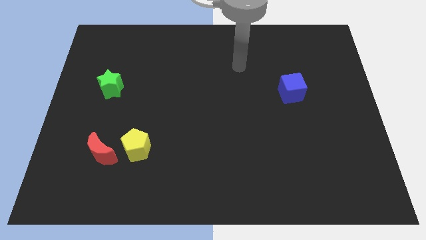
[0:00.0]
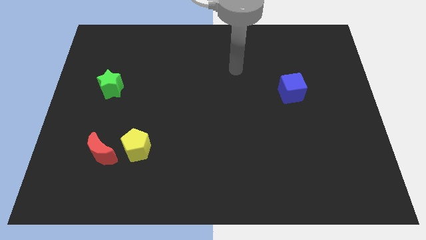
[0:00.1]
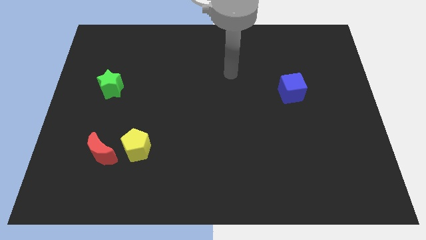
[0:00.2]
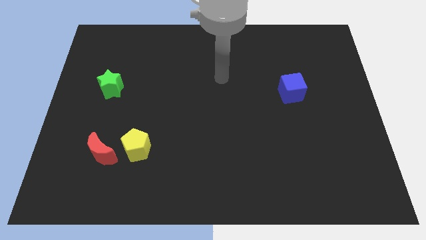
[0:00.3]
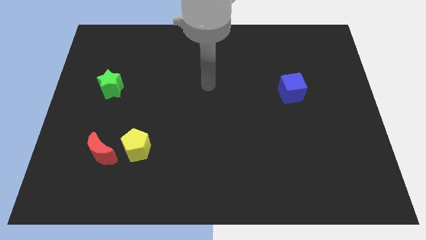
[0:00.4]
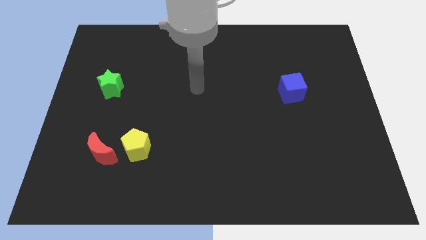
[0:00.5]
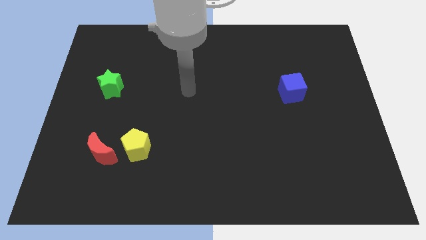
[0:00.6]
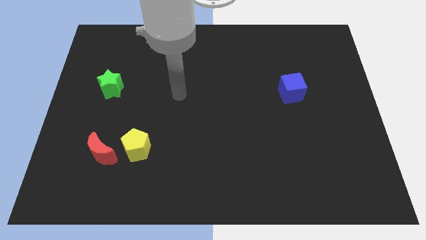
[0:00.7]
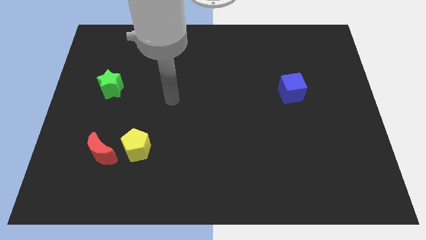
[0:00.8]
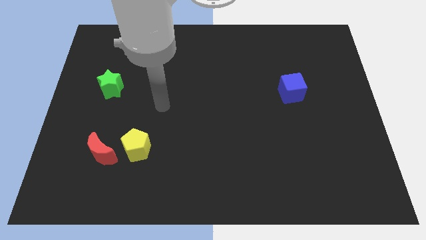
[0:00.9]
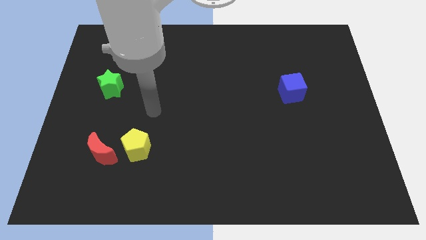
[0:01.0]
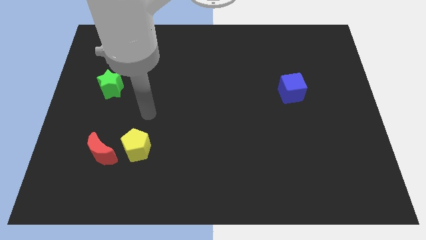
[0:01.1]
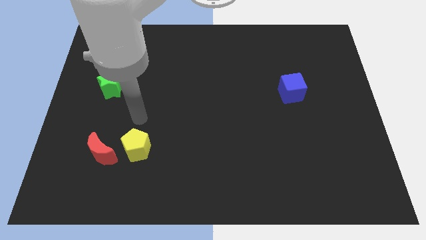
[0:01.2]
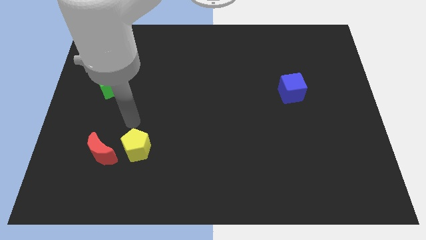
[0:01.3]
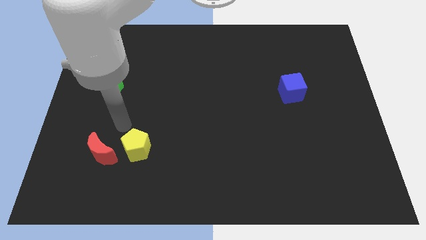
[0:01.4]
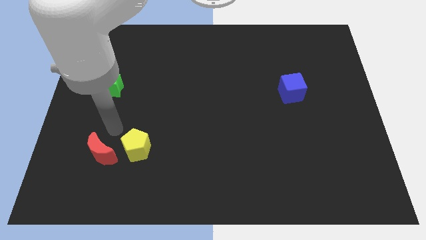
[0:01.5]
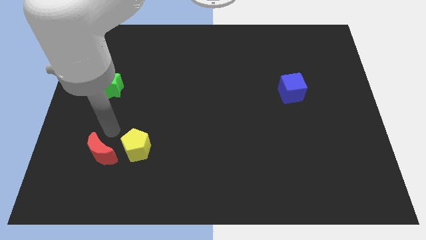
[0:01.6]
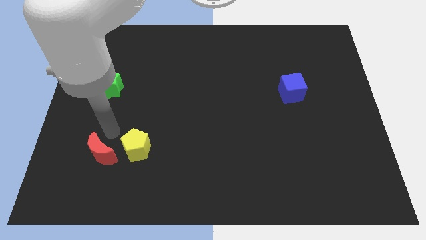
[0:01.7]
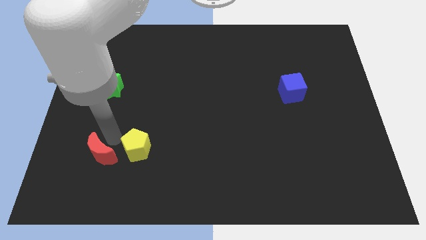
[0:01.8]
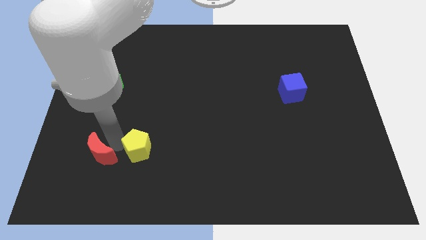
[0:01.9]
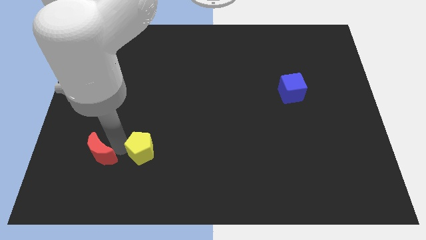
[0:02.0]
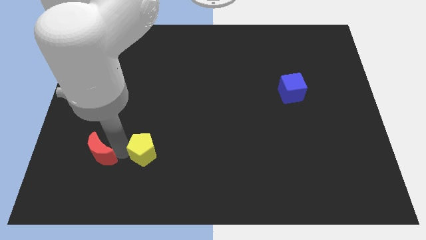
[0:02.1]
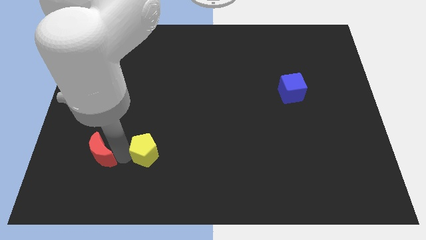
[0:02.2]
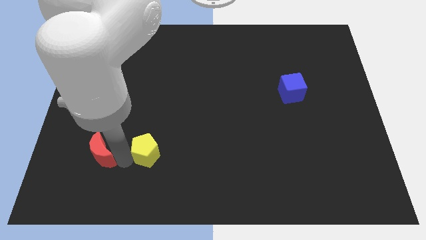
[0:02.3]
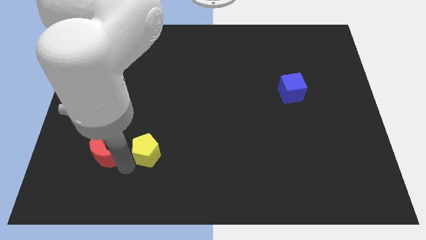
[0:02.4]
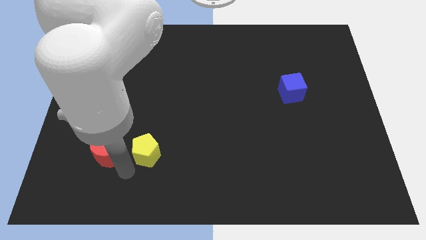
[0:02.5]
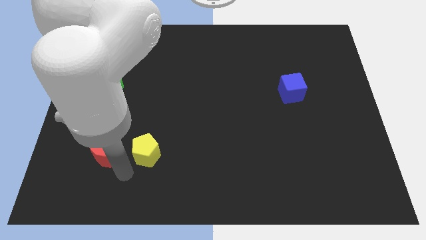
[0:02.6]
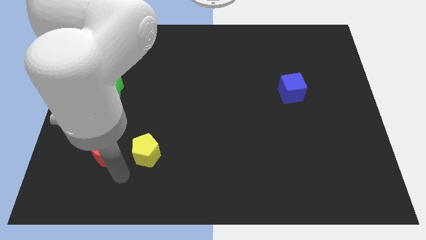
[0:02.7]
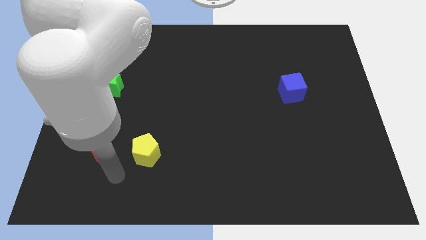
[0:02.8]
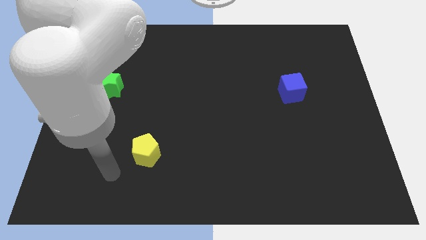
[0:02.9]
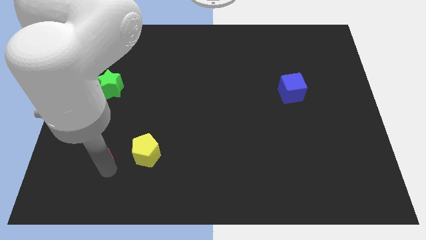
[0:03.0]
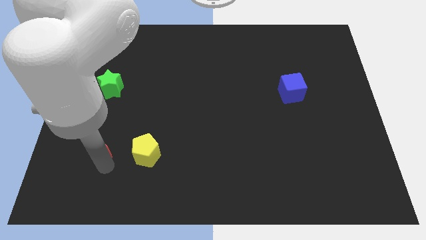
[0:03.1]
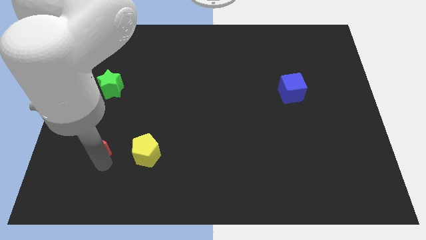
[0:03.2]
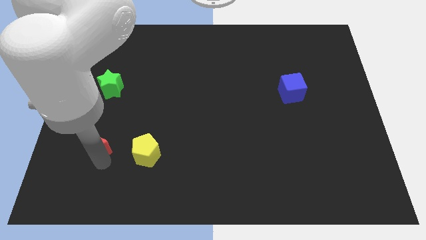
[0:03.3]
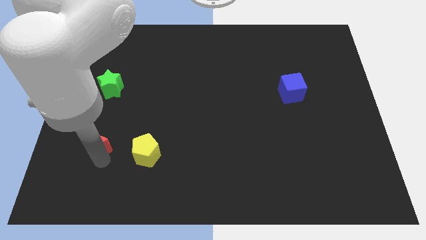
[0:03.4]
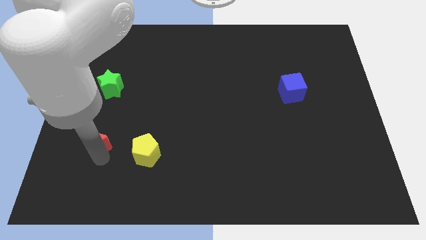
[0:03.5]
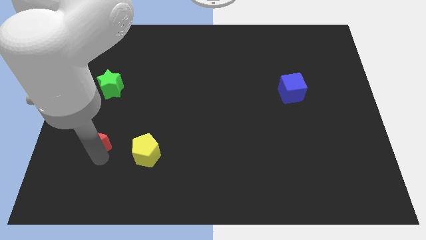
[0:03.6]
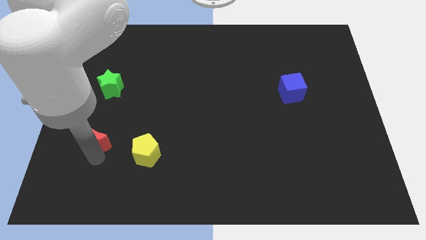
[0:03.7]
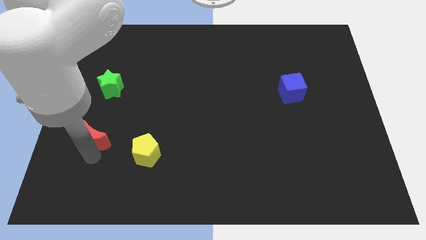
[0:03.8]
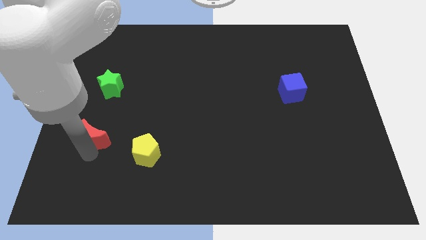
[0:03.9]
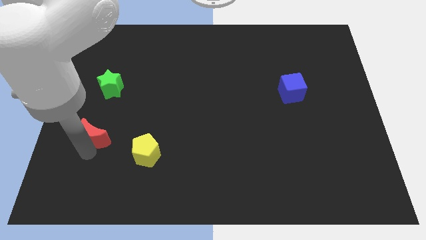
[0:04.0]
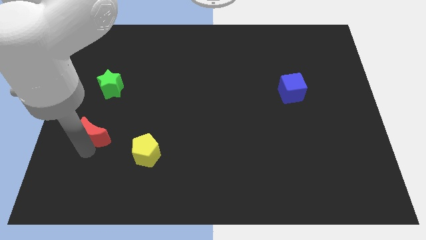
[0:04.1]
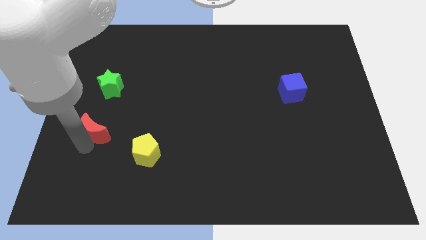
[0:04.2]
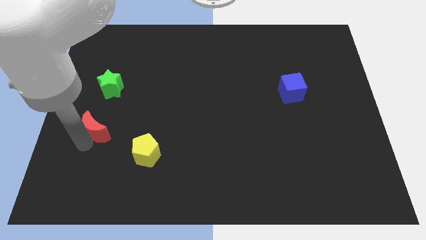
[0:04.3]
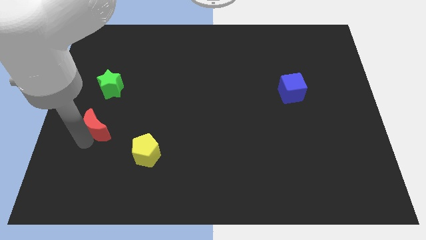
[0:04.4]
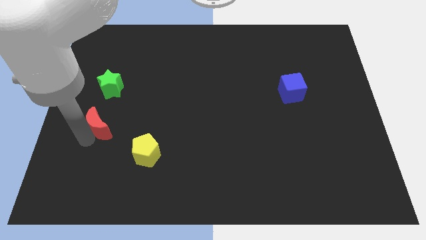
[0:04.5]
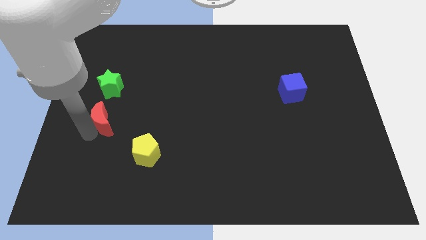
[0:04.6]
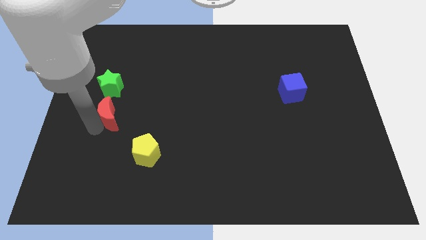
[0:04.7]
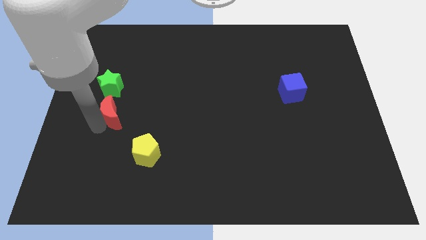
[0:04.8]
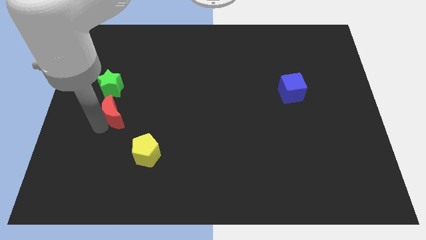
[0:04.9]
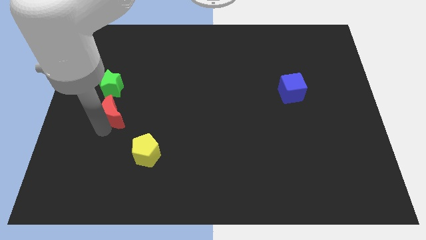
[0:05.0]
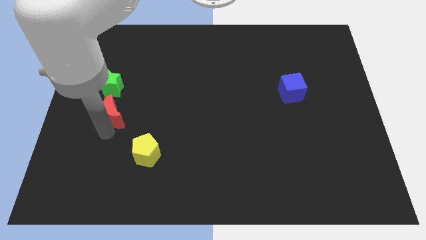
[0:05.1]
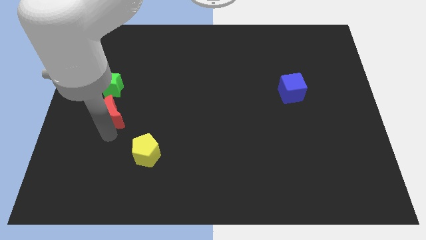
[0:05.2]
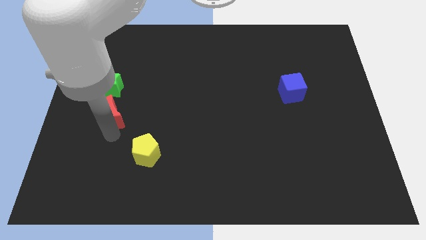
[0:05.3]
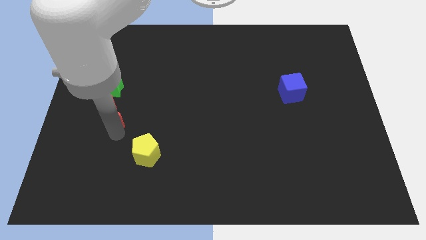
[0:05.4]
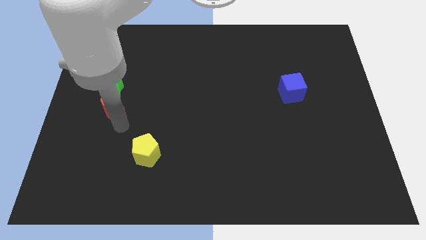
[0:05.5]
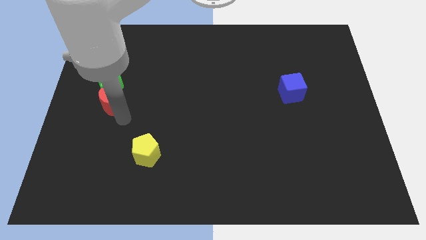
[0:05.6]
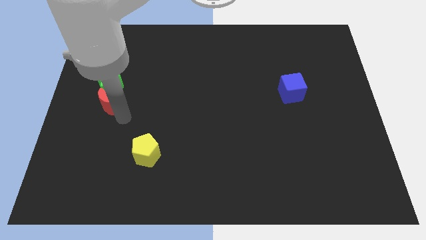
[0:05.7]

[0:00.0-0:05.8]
slide the moon to the green block

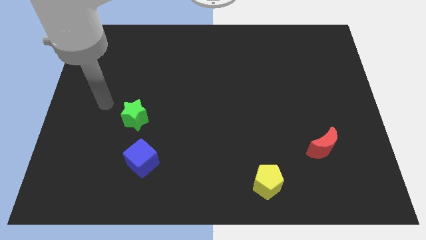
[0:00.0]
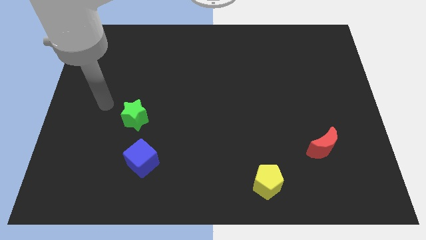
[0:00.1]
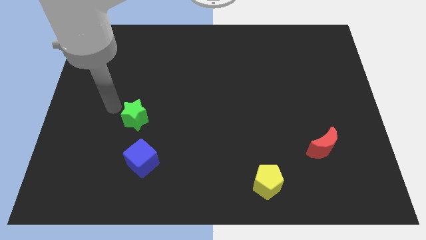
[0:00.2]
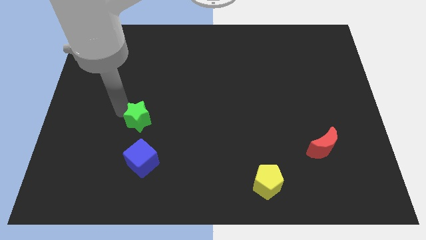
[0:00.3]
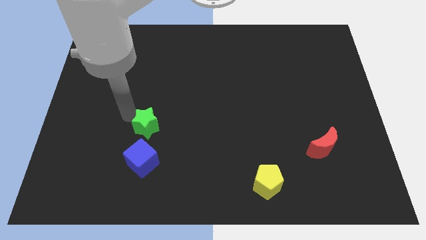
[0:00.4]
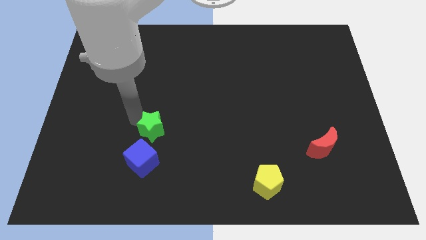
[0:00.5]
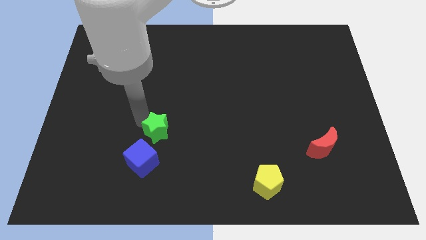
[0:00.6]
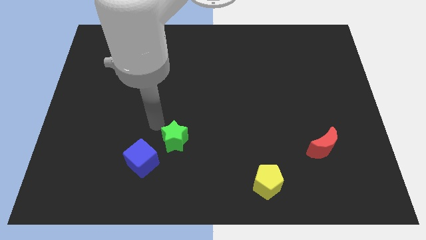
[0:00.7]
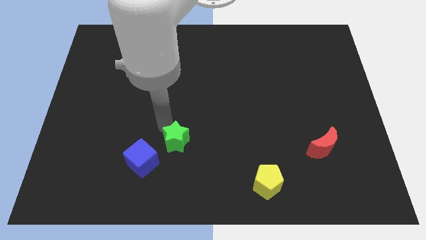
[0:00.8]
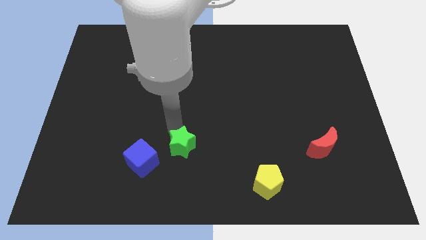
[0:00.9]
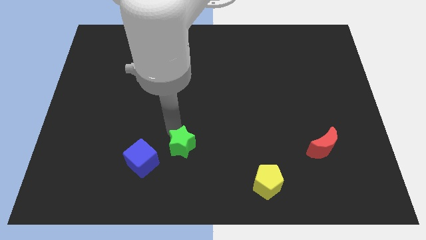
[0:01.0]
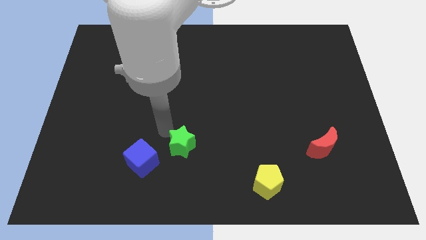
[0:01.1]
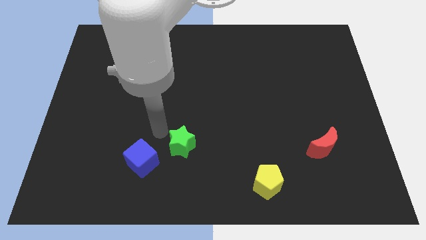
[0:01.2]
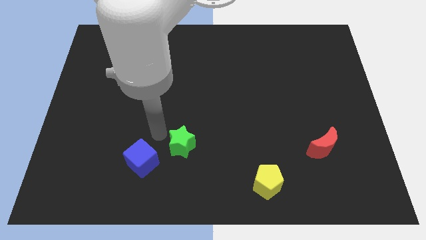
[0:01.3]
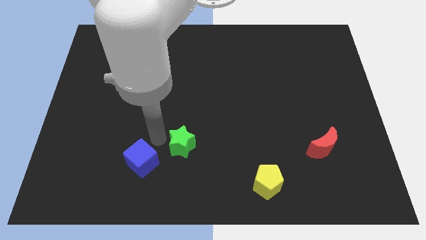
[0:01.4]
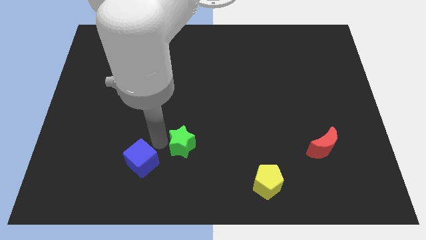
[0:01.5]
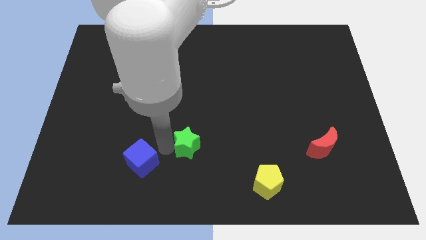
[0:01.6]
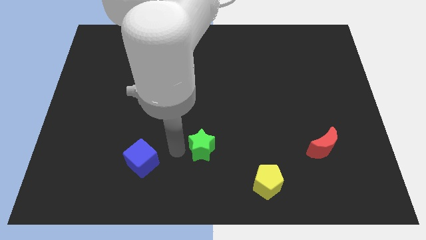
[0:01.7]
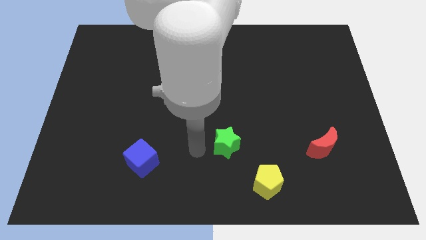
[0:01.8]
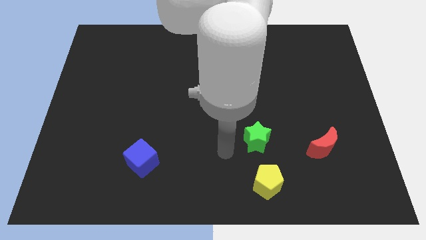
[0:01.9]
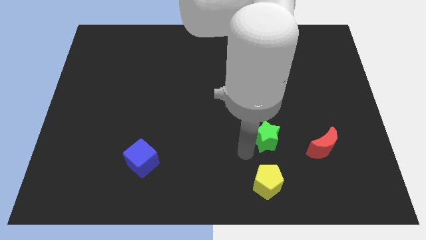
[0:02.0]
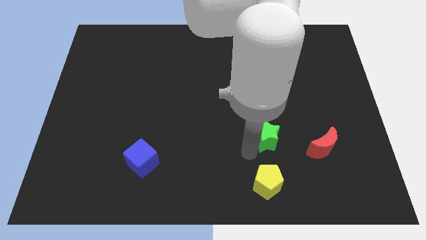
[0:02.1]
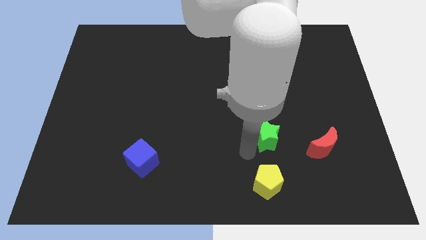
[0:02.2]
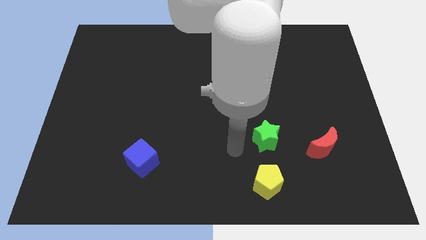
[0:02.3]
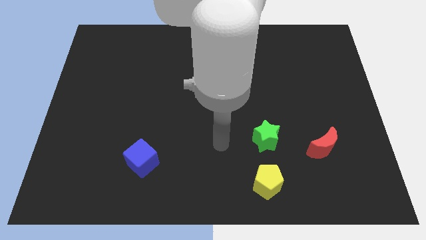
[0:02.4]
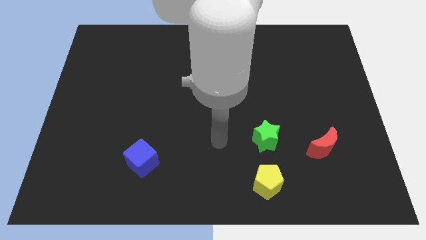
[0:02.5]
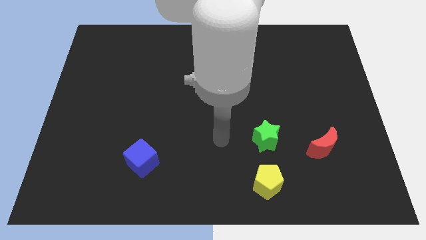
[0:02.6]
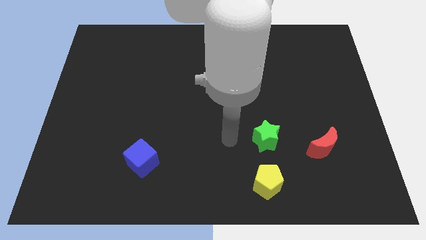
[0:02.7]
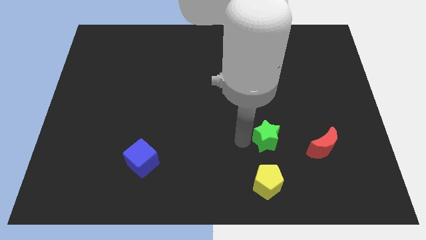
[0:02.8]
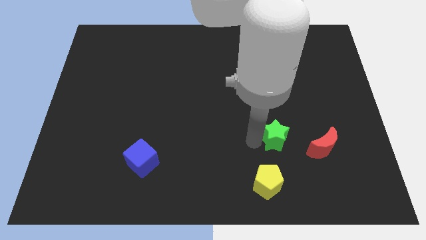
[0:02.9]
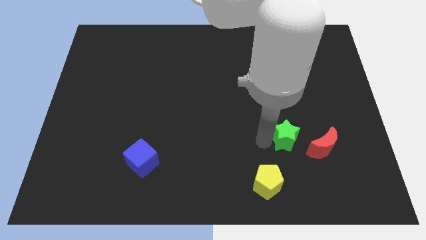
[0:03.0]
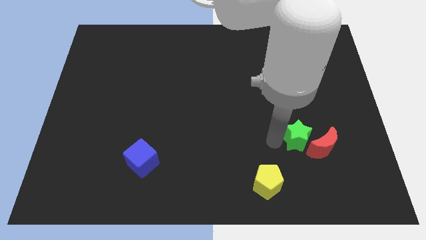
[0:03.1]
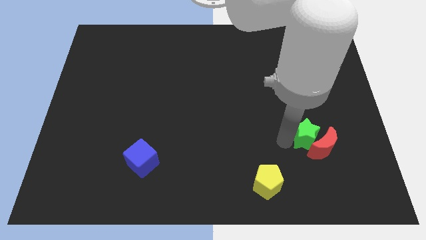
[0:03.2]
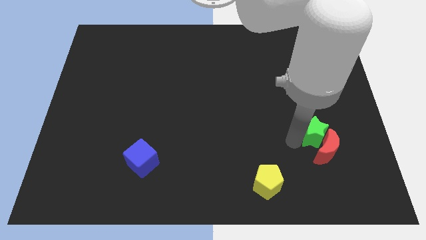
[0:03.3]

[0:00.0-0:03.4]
move the star close to the moon
